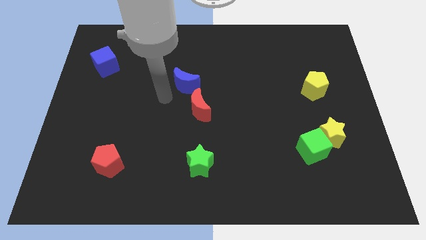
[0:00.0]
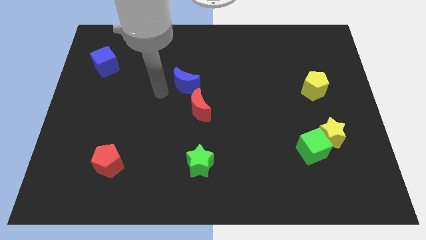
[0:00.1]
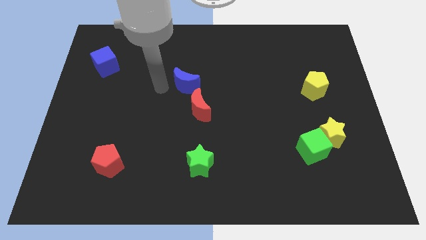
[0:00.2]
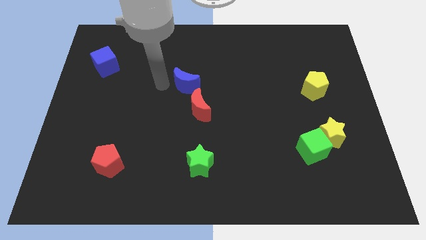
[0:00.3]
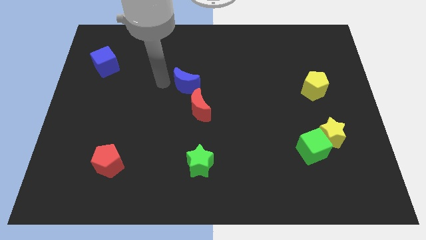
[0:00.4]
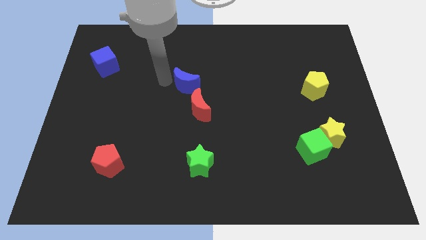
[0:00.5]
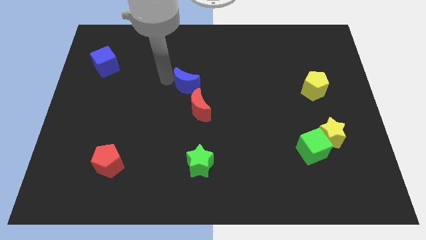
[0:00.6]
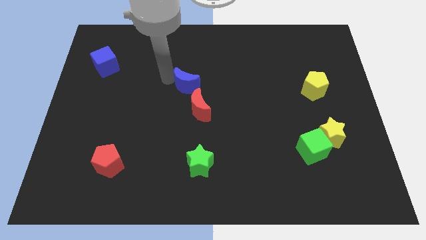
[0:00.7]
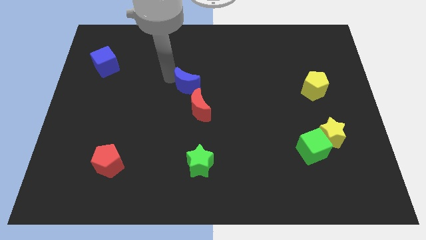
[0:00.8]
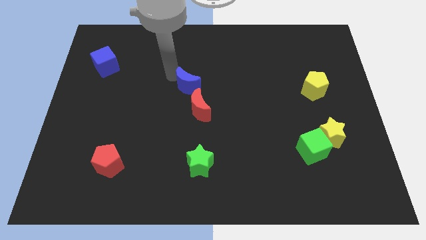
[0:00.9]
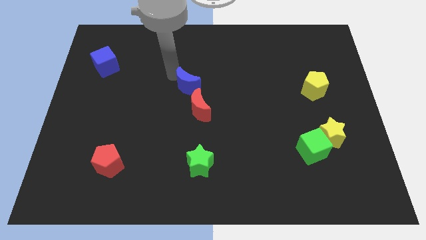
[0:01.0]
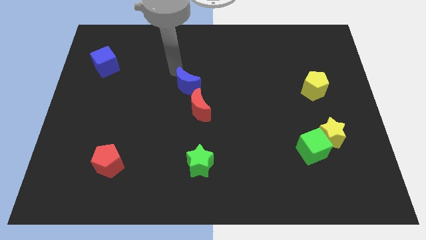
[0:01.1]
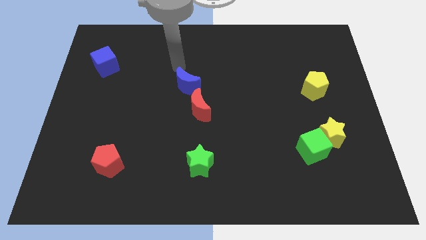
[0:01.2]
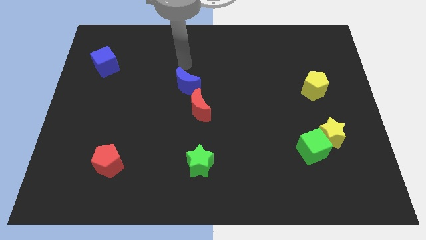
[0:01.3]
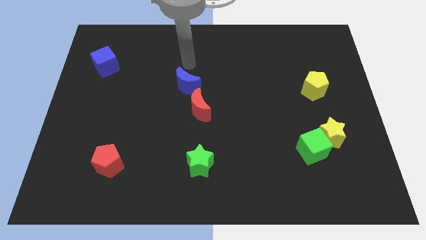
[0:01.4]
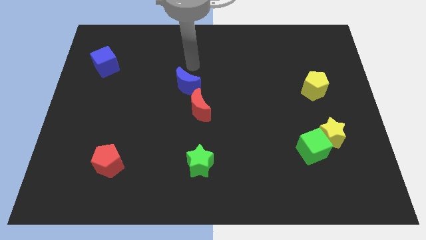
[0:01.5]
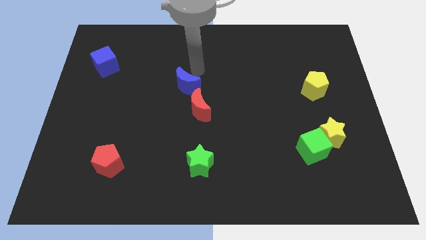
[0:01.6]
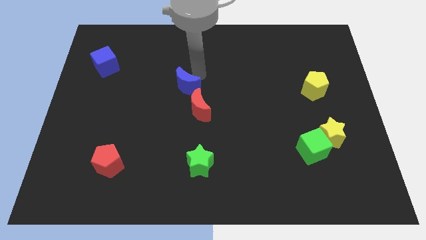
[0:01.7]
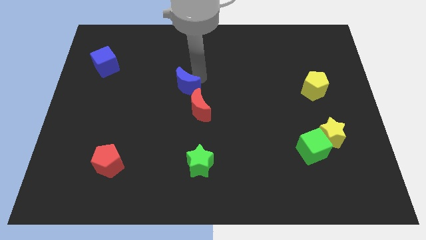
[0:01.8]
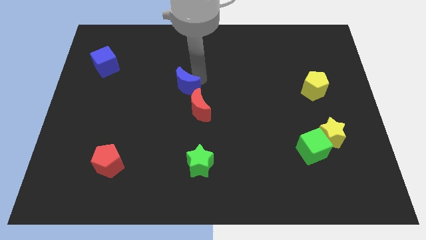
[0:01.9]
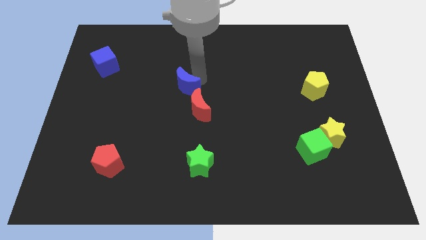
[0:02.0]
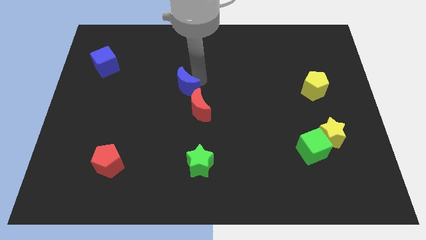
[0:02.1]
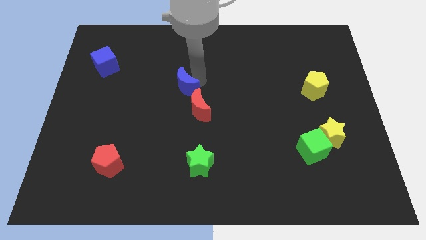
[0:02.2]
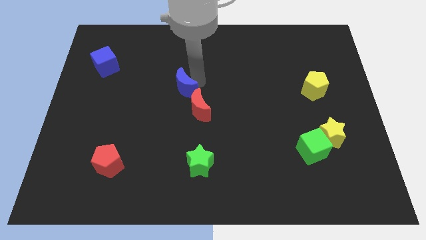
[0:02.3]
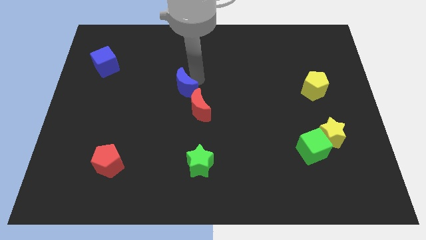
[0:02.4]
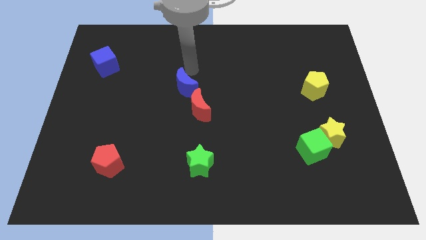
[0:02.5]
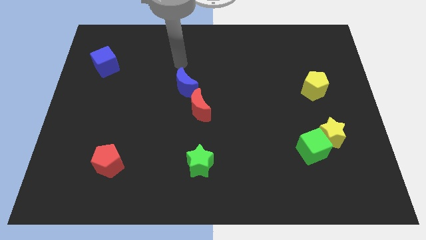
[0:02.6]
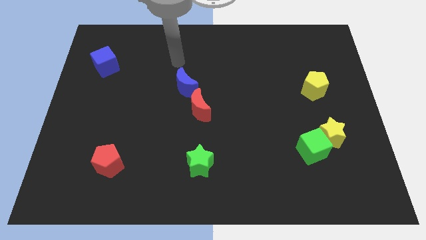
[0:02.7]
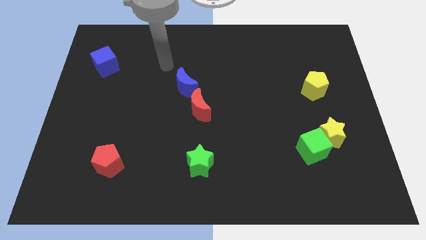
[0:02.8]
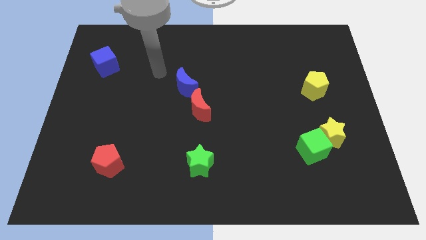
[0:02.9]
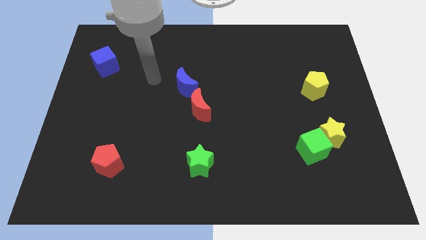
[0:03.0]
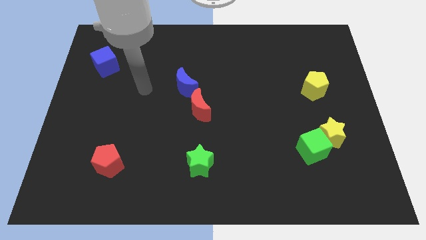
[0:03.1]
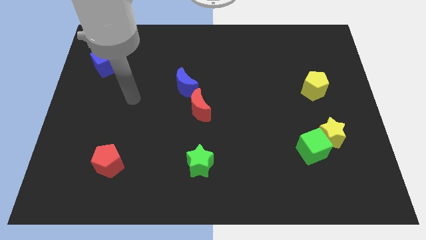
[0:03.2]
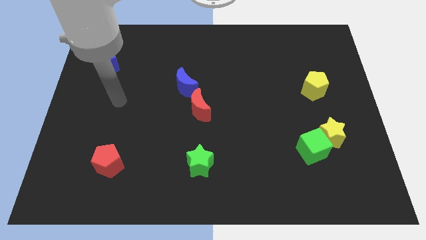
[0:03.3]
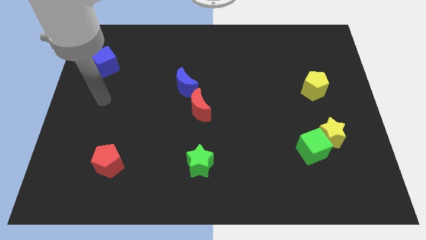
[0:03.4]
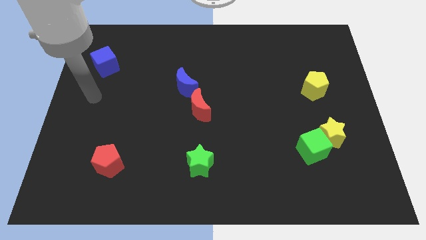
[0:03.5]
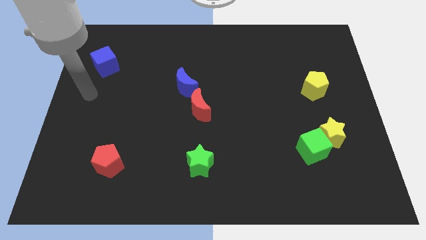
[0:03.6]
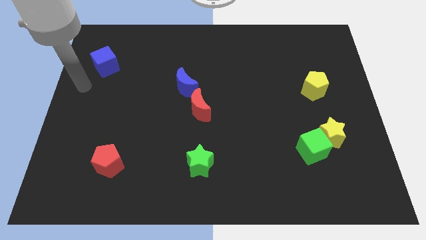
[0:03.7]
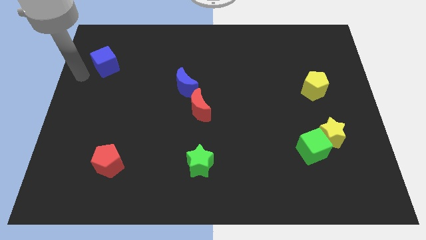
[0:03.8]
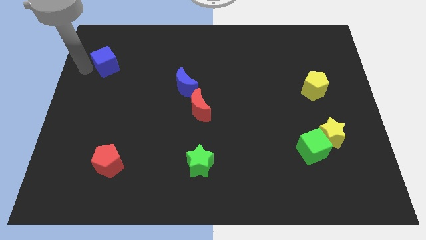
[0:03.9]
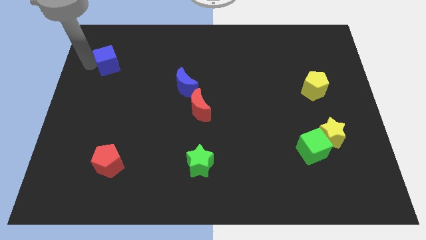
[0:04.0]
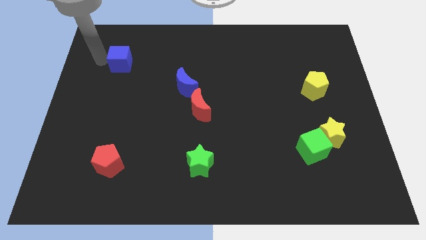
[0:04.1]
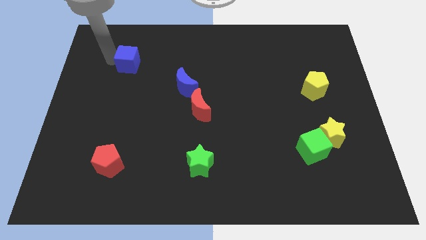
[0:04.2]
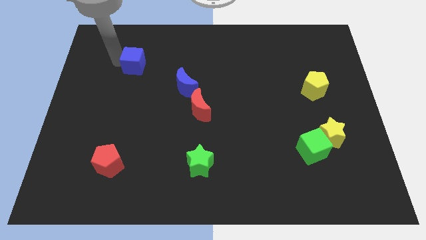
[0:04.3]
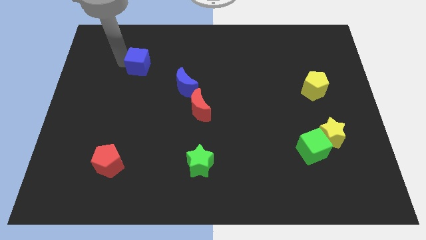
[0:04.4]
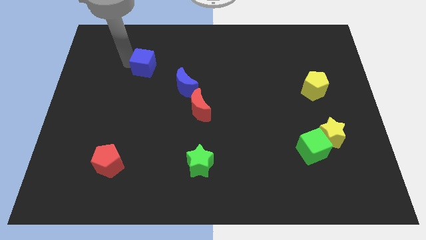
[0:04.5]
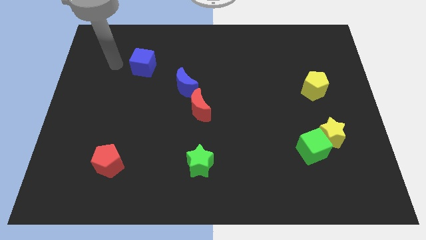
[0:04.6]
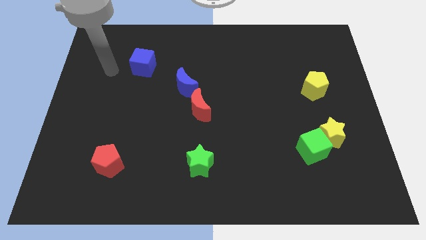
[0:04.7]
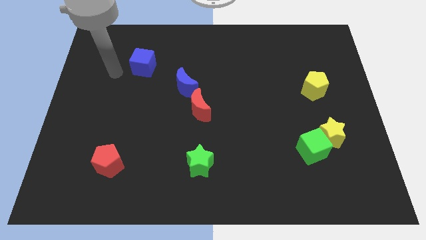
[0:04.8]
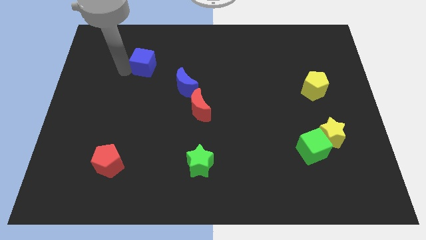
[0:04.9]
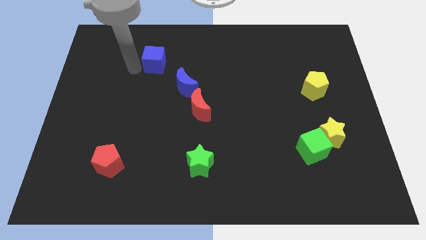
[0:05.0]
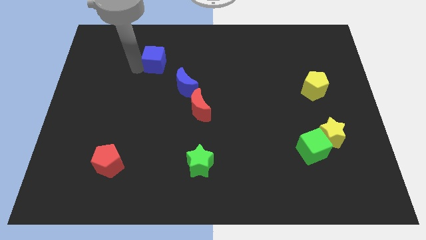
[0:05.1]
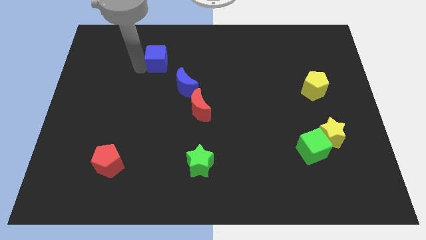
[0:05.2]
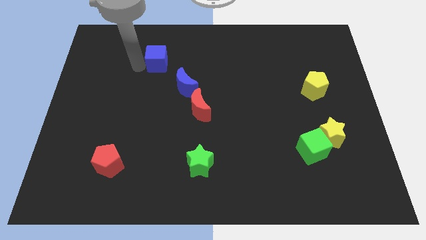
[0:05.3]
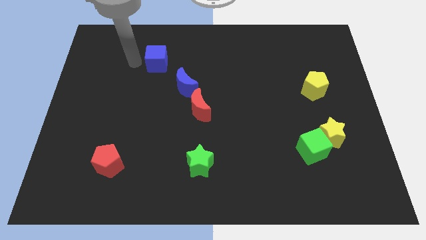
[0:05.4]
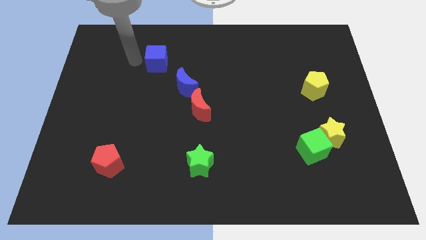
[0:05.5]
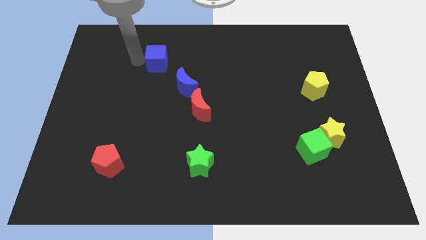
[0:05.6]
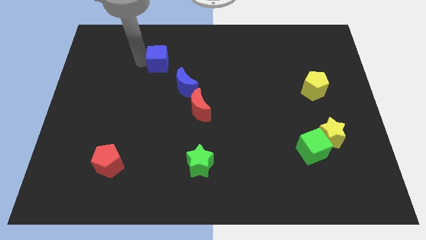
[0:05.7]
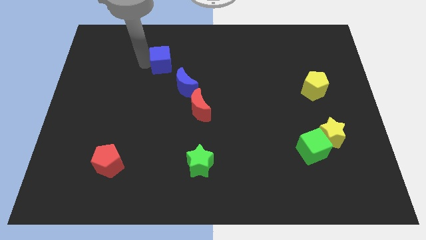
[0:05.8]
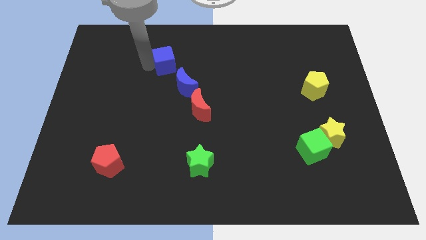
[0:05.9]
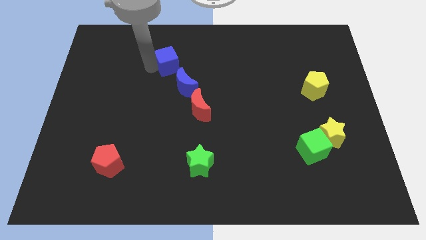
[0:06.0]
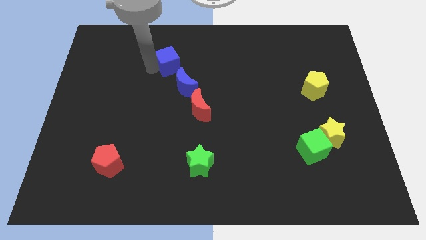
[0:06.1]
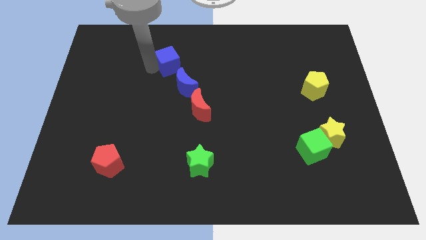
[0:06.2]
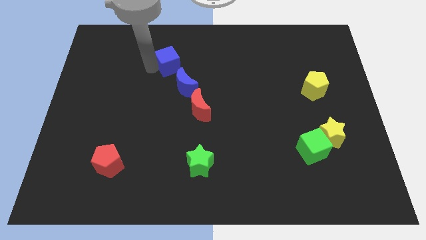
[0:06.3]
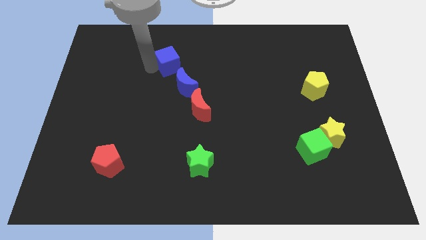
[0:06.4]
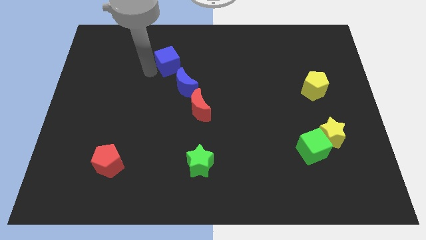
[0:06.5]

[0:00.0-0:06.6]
arrange the blue moon and blue cube to the top left of the red moon

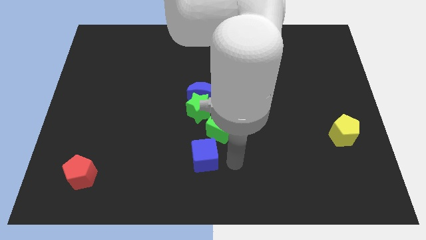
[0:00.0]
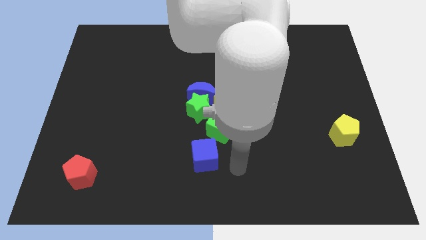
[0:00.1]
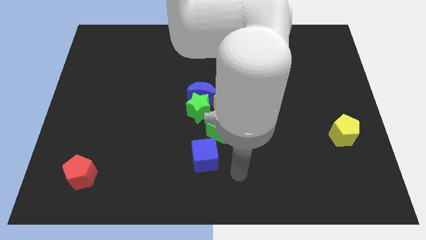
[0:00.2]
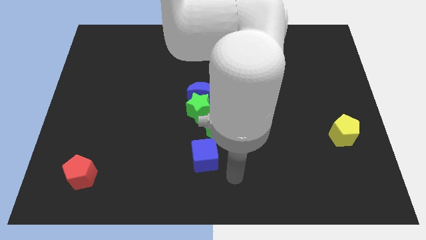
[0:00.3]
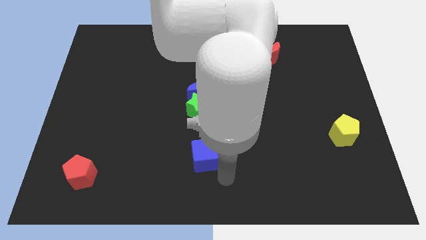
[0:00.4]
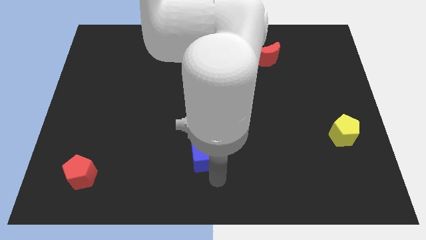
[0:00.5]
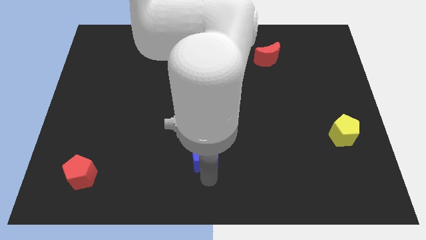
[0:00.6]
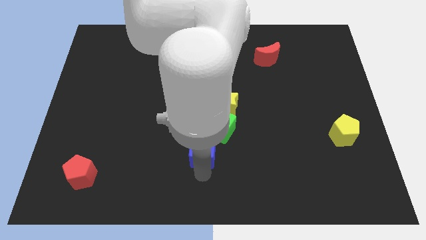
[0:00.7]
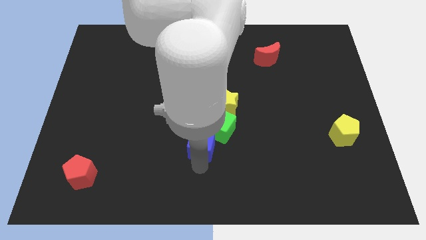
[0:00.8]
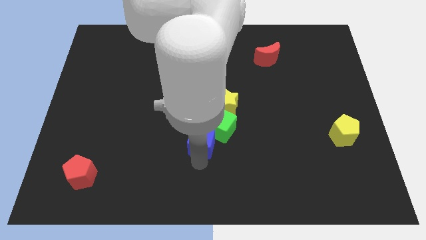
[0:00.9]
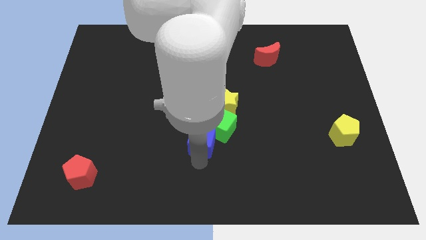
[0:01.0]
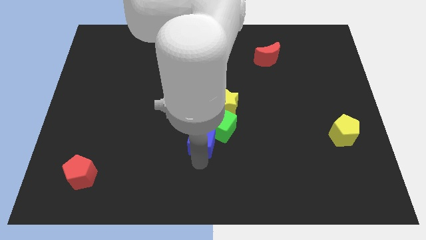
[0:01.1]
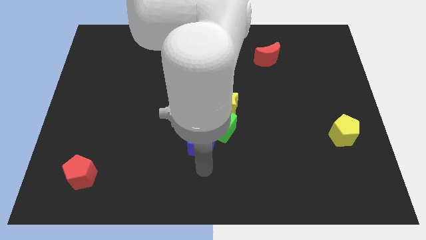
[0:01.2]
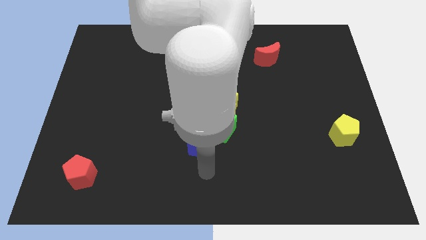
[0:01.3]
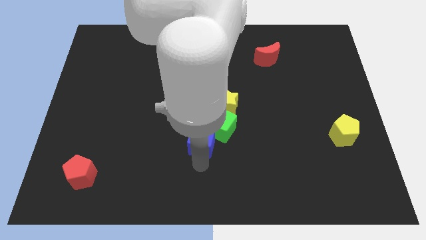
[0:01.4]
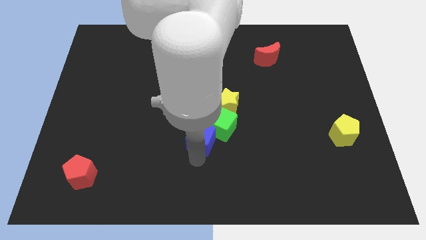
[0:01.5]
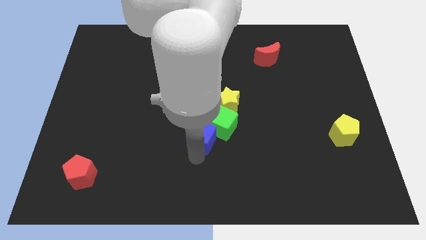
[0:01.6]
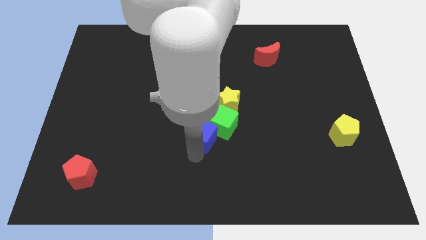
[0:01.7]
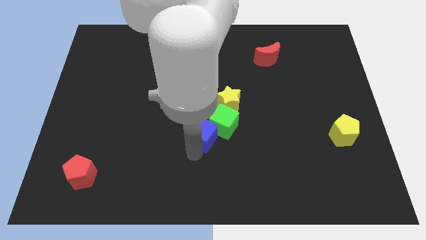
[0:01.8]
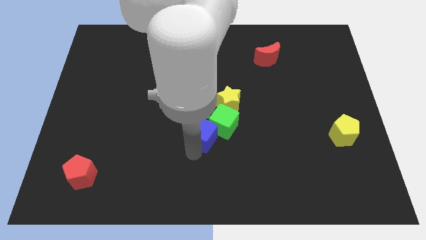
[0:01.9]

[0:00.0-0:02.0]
push the blue cube into the bottom side of the green cube

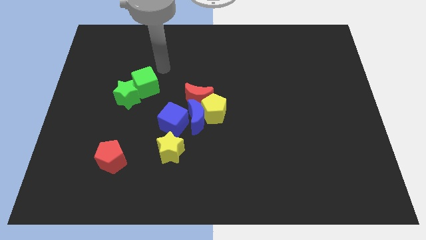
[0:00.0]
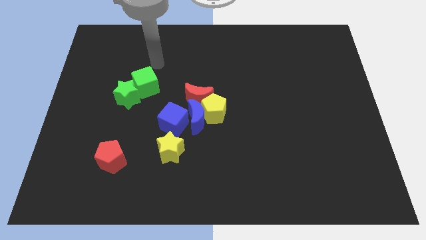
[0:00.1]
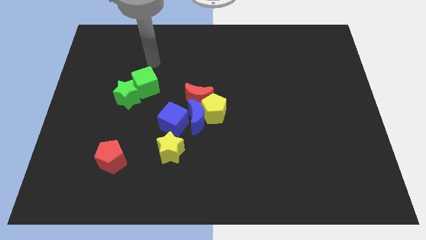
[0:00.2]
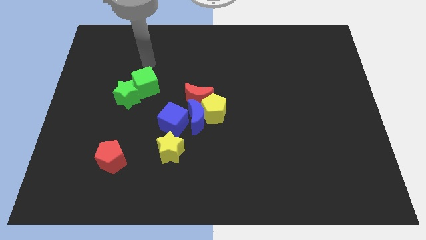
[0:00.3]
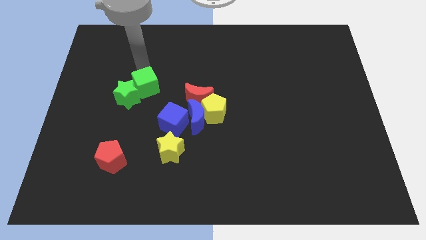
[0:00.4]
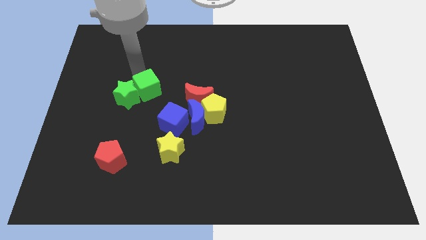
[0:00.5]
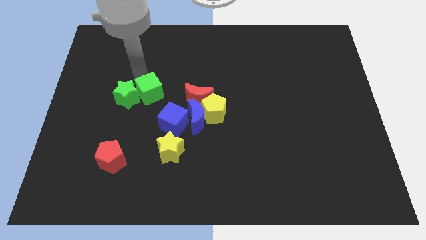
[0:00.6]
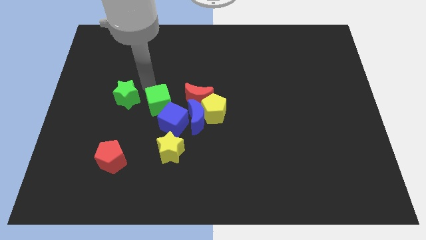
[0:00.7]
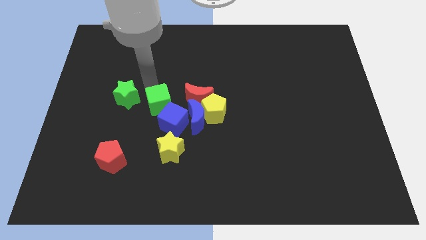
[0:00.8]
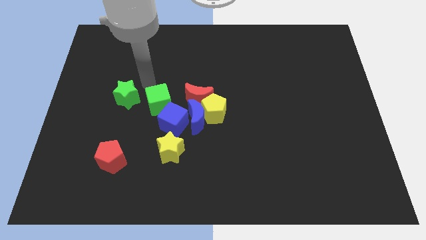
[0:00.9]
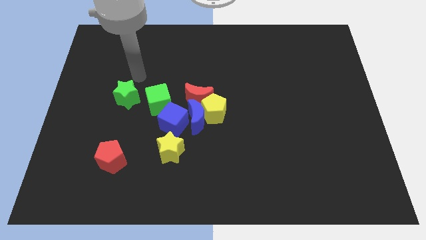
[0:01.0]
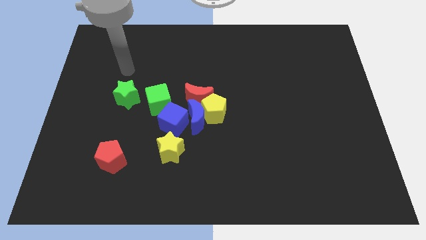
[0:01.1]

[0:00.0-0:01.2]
move the green cube to the top of the blue cube
